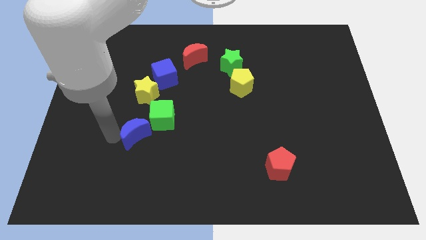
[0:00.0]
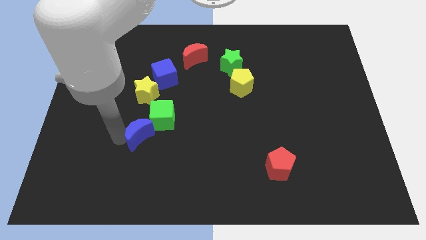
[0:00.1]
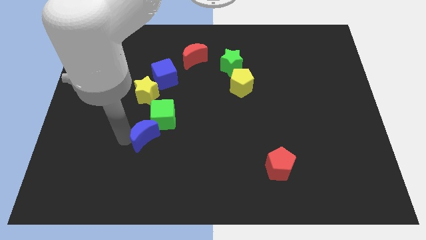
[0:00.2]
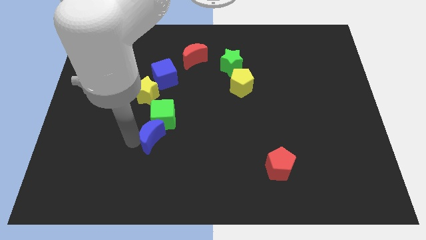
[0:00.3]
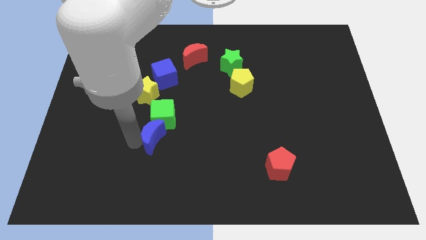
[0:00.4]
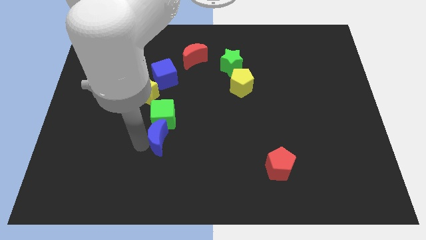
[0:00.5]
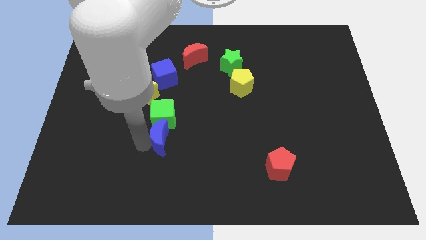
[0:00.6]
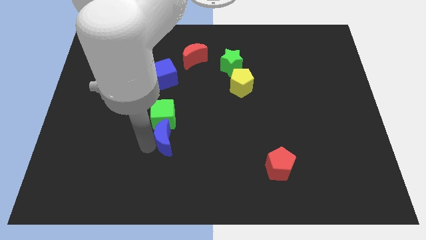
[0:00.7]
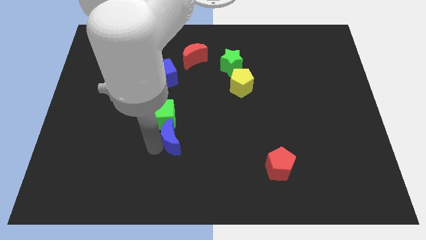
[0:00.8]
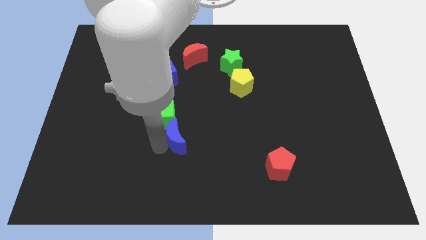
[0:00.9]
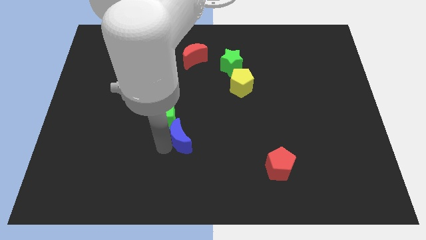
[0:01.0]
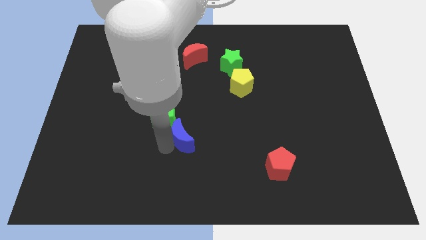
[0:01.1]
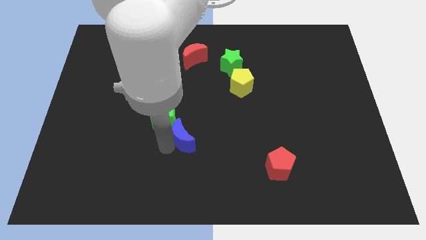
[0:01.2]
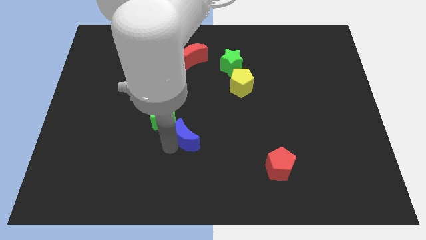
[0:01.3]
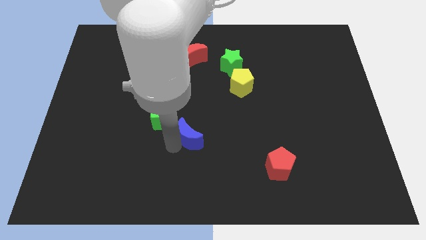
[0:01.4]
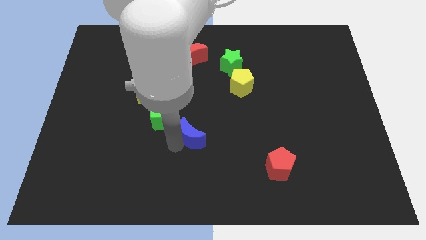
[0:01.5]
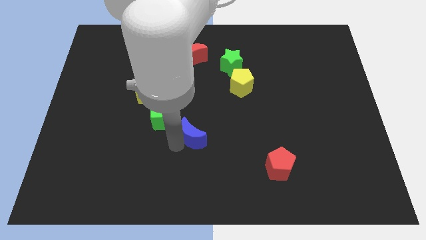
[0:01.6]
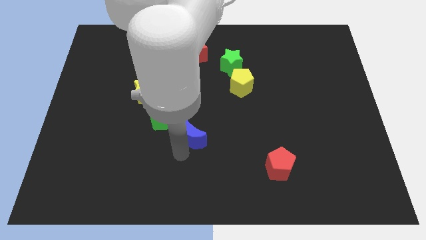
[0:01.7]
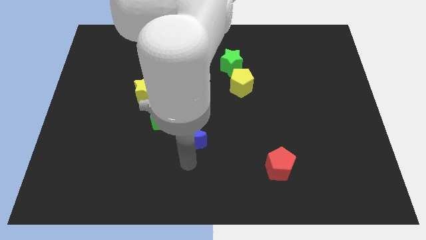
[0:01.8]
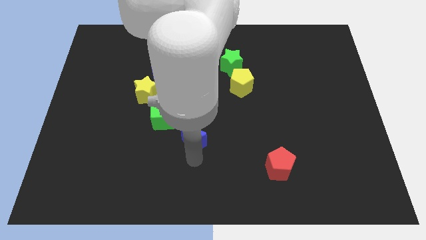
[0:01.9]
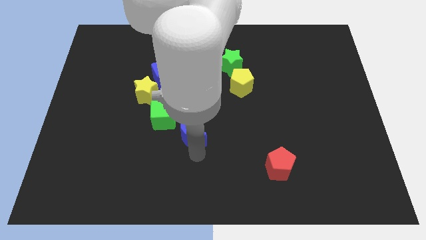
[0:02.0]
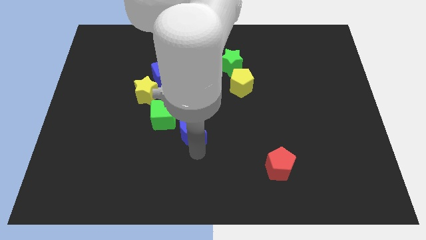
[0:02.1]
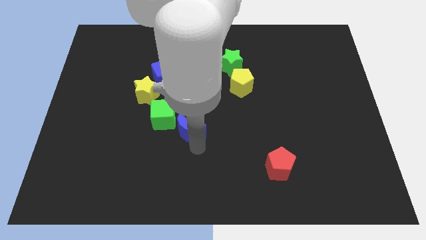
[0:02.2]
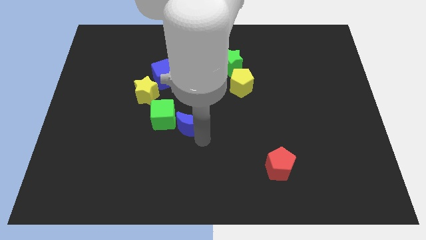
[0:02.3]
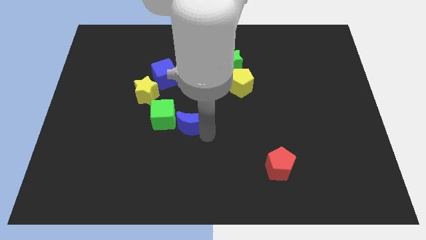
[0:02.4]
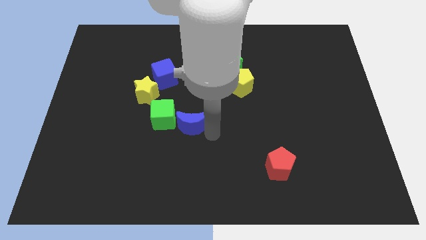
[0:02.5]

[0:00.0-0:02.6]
move the blue crescent towards right to the green cube

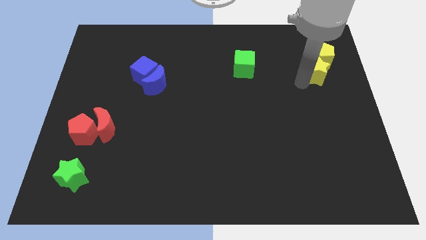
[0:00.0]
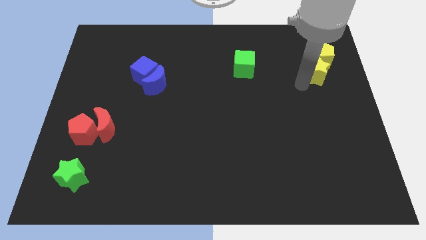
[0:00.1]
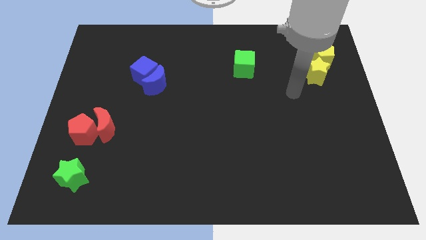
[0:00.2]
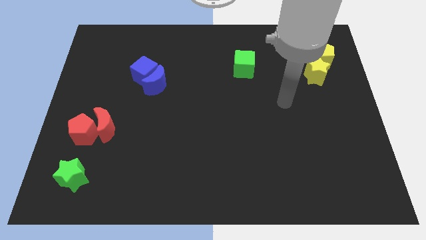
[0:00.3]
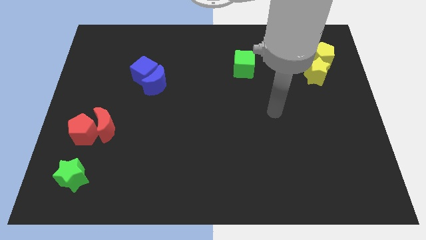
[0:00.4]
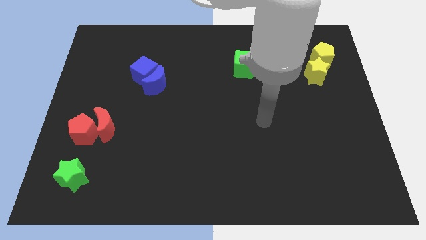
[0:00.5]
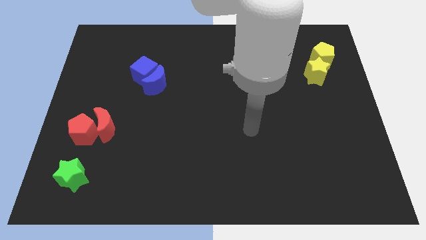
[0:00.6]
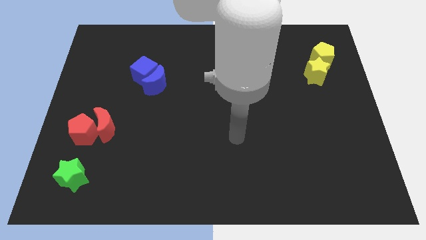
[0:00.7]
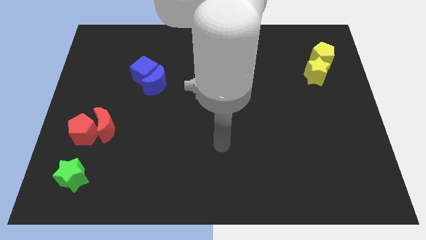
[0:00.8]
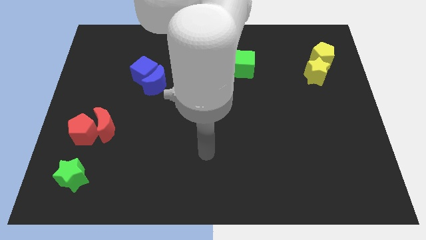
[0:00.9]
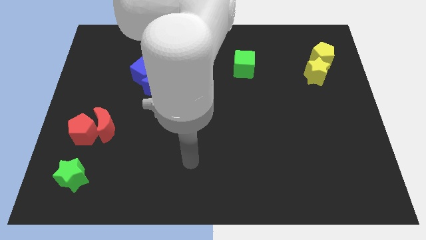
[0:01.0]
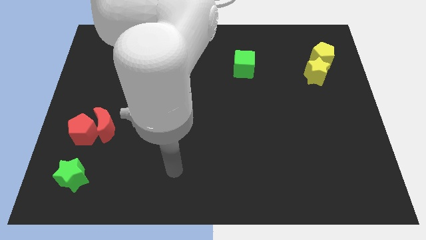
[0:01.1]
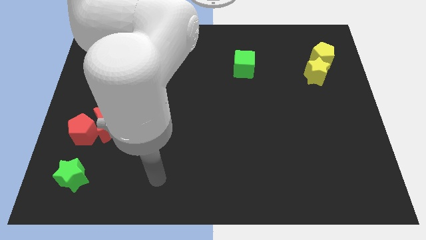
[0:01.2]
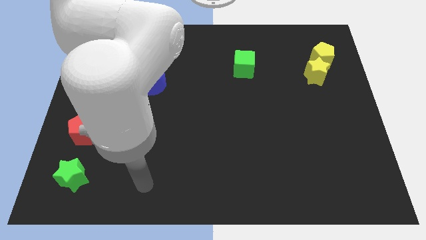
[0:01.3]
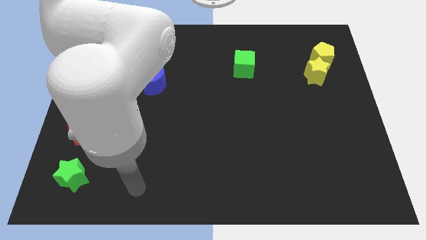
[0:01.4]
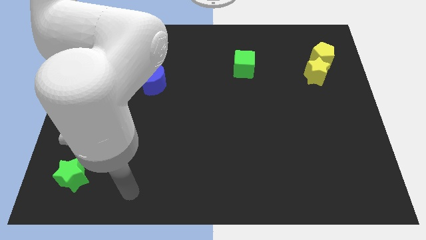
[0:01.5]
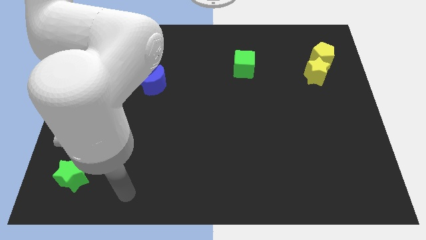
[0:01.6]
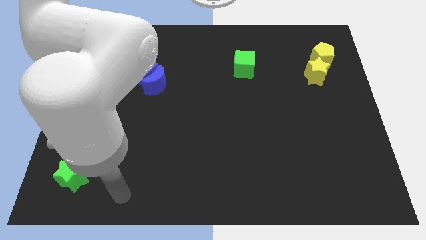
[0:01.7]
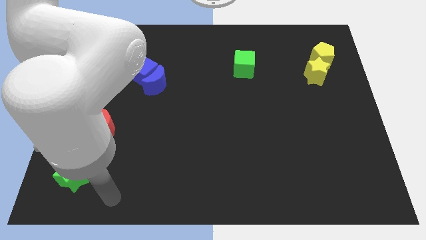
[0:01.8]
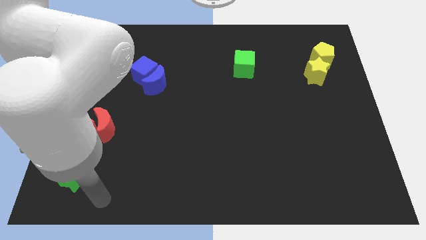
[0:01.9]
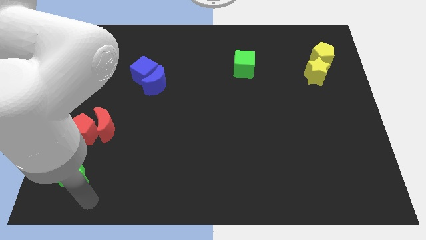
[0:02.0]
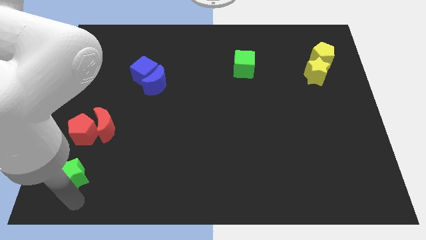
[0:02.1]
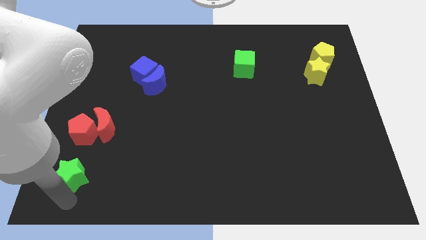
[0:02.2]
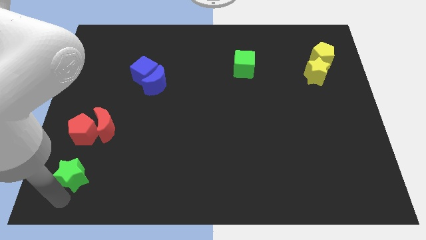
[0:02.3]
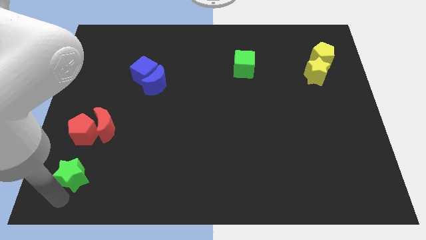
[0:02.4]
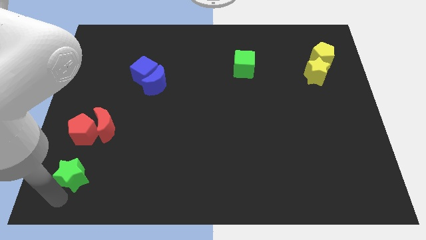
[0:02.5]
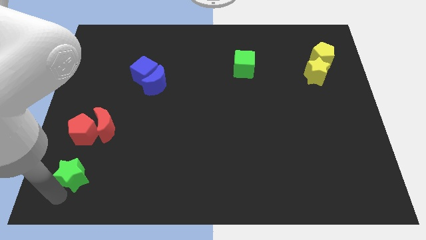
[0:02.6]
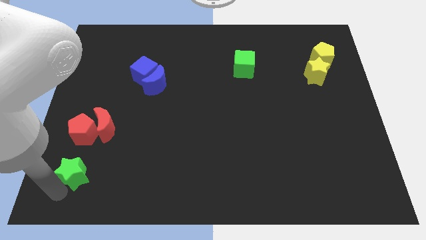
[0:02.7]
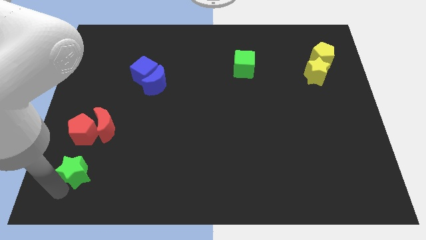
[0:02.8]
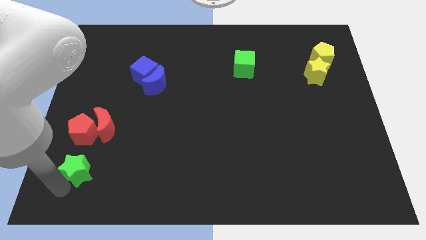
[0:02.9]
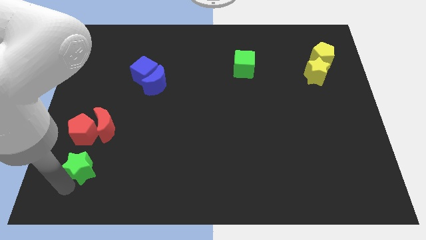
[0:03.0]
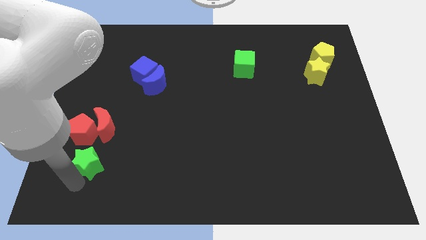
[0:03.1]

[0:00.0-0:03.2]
move the green star near the red pentagon

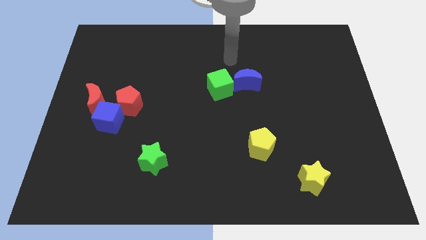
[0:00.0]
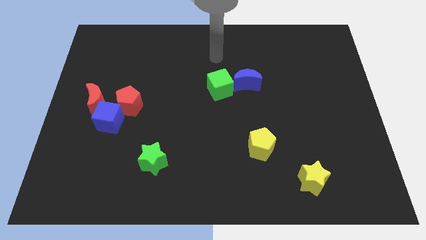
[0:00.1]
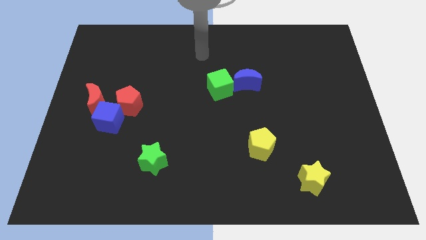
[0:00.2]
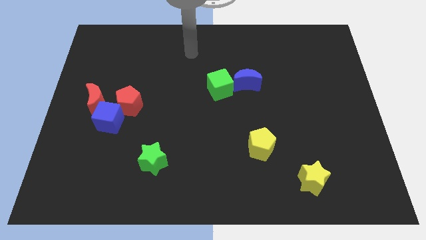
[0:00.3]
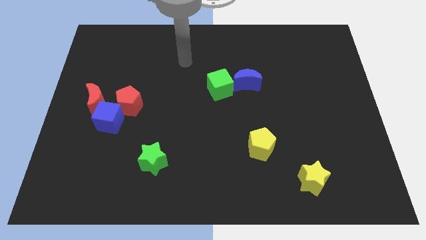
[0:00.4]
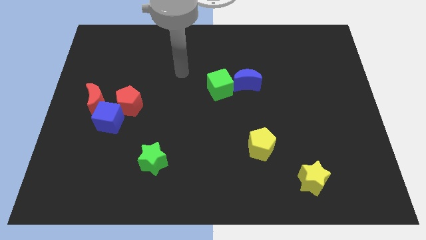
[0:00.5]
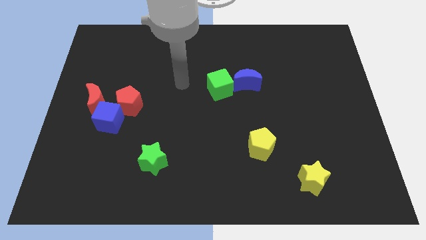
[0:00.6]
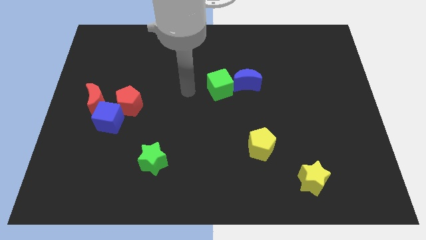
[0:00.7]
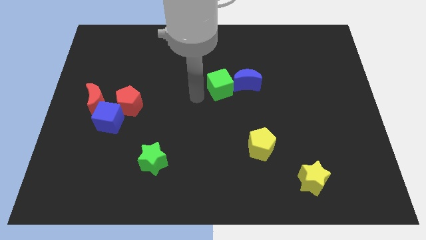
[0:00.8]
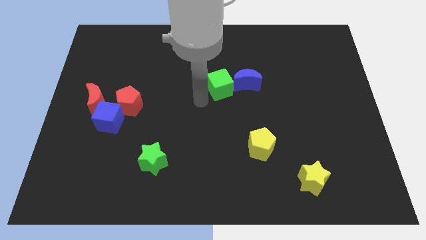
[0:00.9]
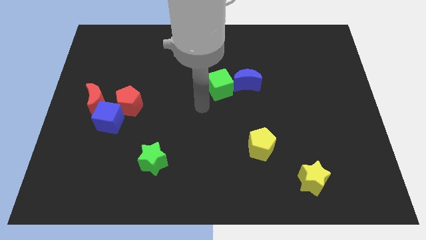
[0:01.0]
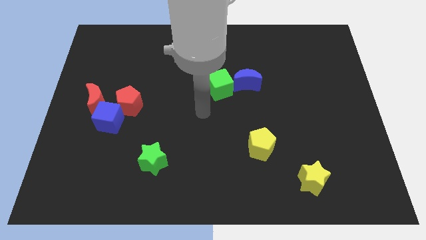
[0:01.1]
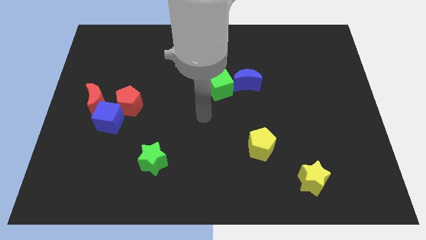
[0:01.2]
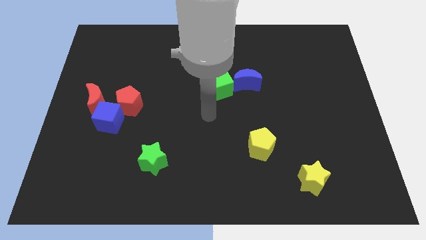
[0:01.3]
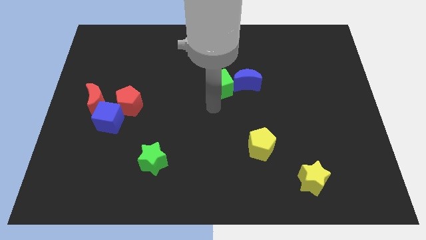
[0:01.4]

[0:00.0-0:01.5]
place your arm below green cube

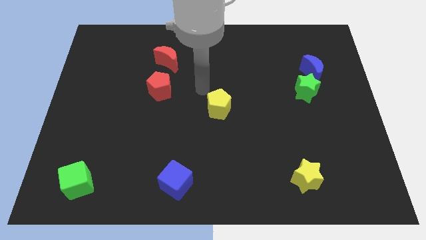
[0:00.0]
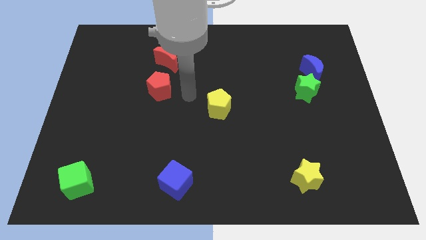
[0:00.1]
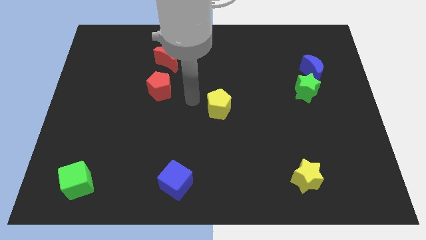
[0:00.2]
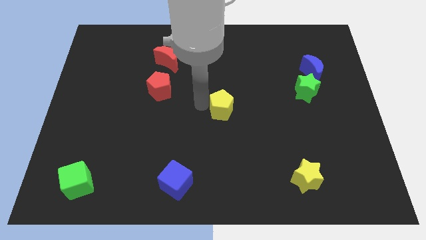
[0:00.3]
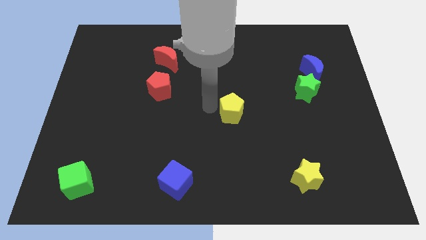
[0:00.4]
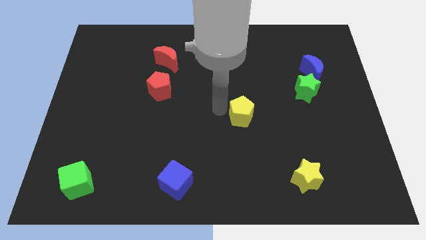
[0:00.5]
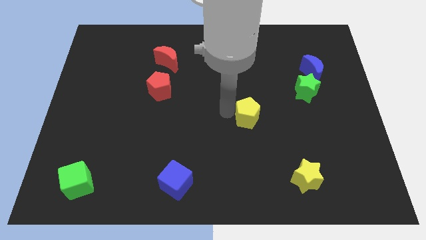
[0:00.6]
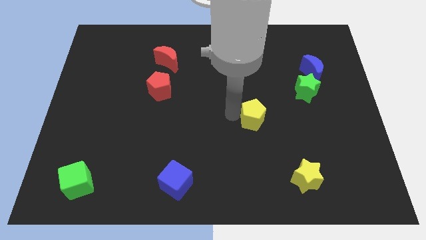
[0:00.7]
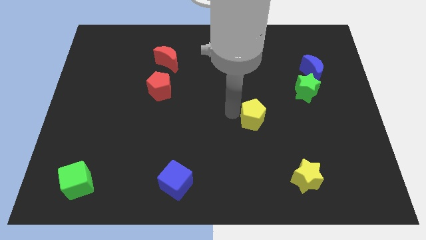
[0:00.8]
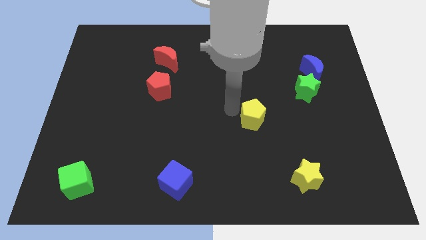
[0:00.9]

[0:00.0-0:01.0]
move yellow pentagon ton its right slightly

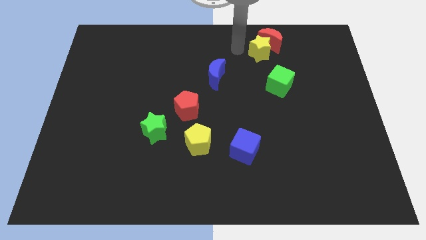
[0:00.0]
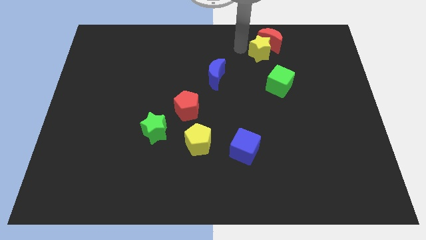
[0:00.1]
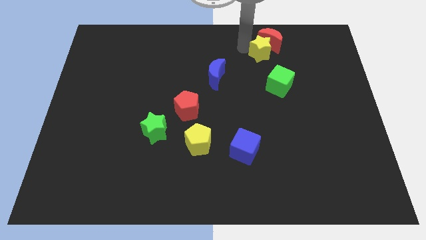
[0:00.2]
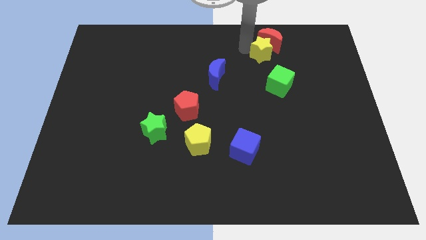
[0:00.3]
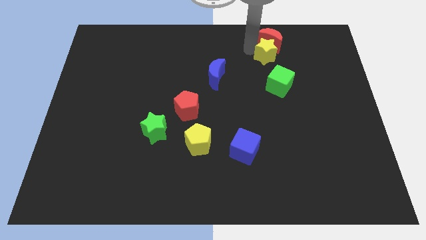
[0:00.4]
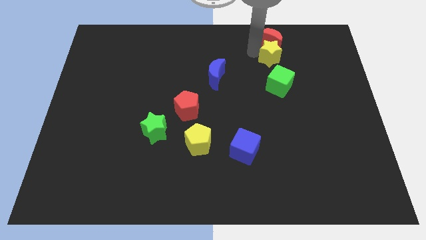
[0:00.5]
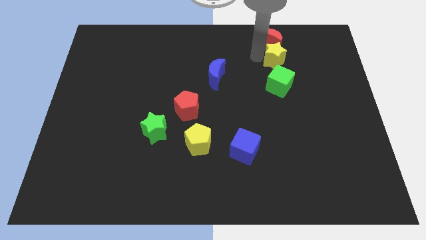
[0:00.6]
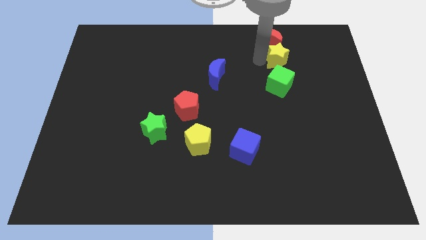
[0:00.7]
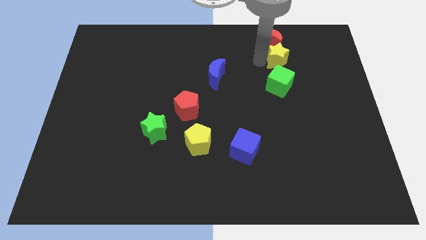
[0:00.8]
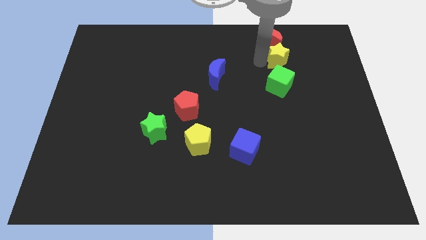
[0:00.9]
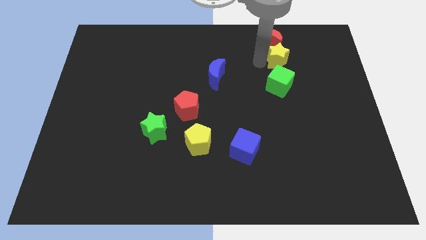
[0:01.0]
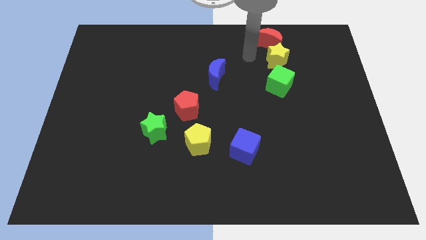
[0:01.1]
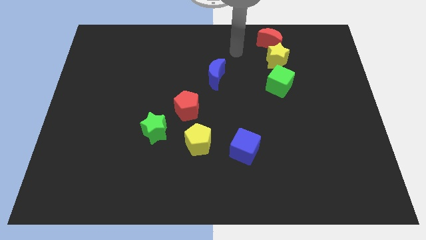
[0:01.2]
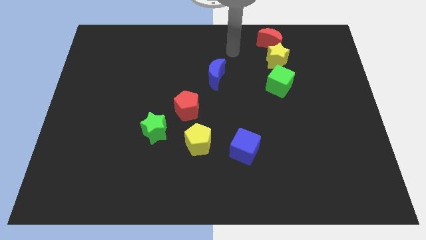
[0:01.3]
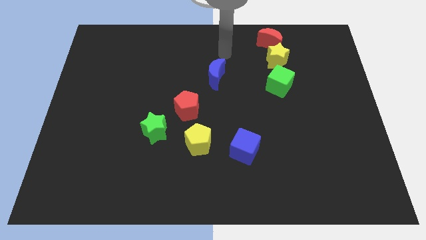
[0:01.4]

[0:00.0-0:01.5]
place the yellow star in between the green cube and the red crescent
